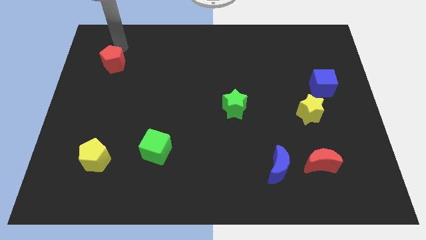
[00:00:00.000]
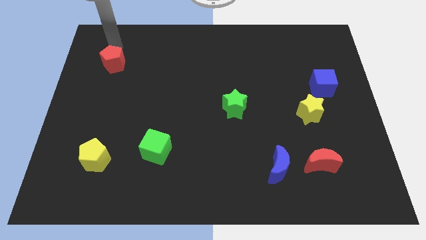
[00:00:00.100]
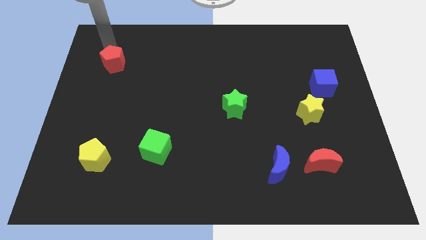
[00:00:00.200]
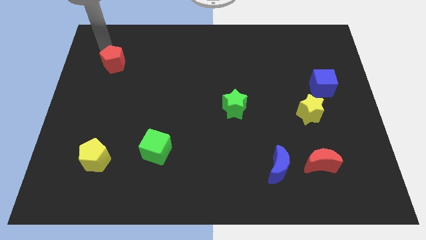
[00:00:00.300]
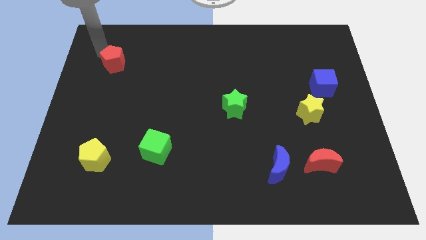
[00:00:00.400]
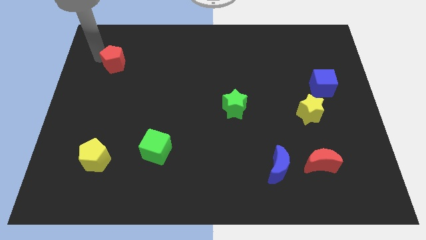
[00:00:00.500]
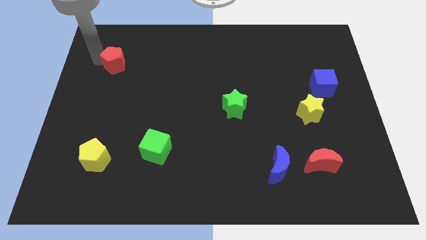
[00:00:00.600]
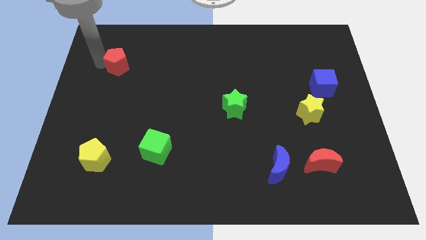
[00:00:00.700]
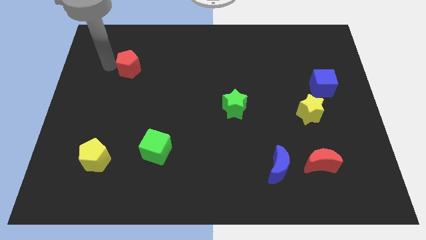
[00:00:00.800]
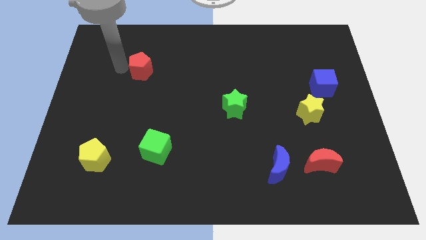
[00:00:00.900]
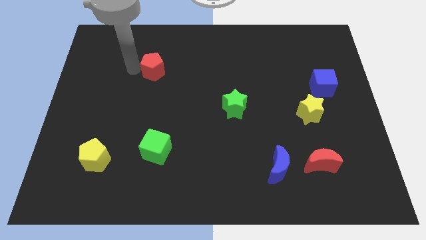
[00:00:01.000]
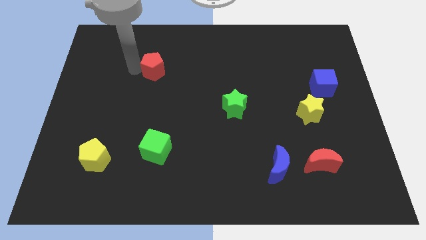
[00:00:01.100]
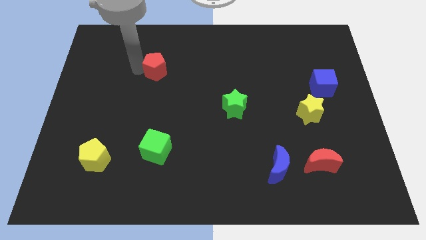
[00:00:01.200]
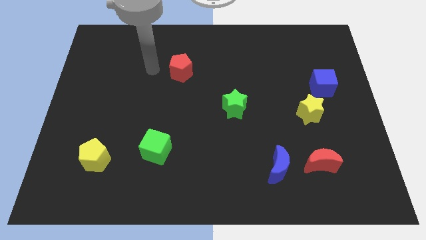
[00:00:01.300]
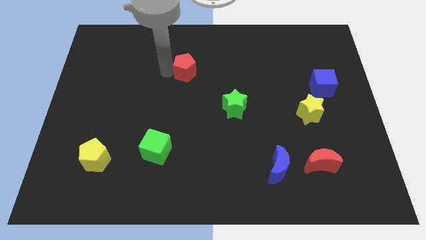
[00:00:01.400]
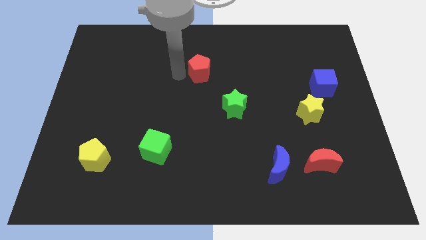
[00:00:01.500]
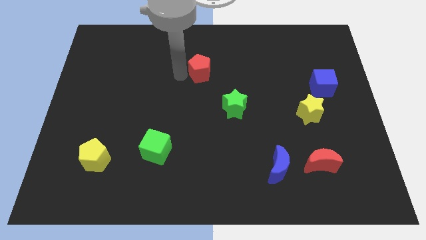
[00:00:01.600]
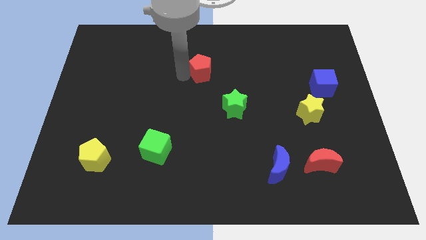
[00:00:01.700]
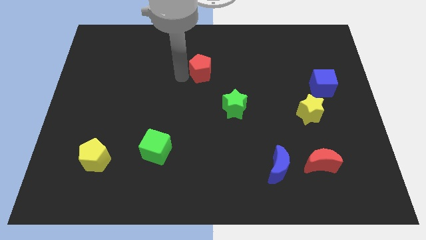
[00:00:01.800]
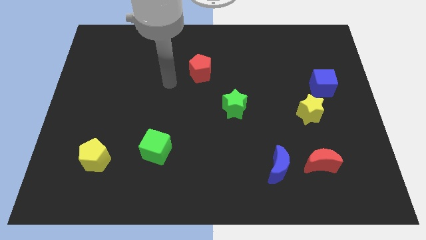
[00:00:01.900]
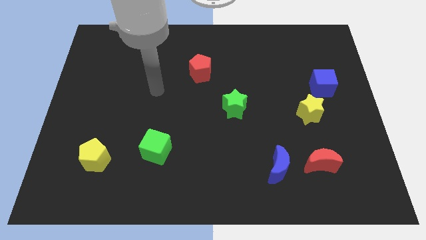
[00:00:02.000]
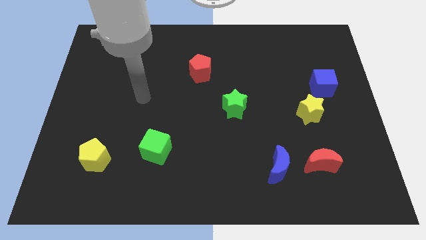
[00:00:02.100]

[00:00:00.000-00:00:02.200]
move the red pentagon diagonal to the green star

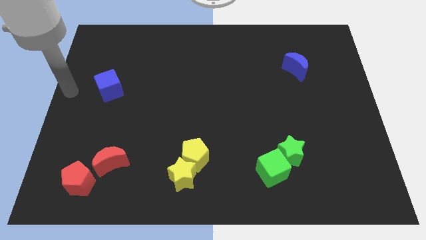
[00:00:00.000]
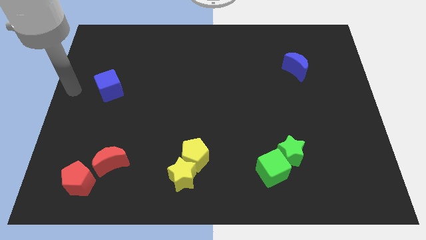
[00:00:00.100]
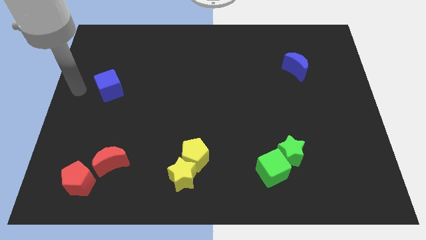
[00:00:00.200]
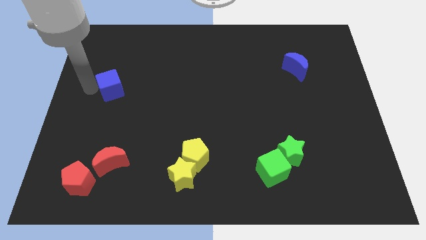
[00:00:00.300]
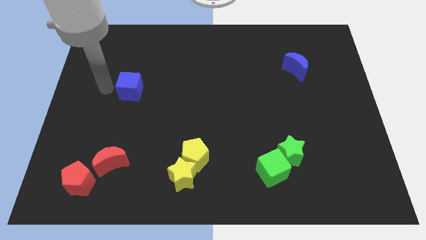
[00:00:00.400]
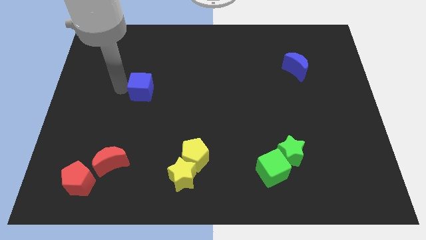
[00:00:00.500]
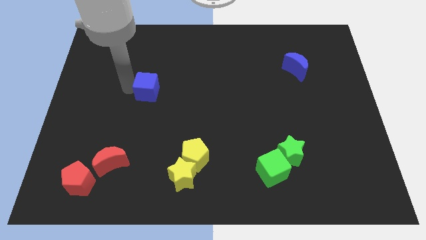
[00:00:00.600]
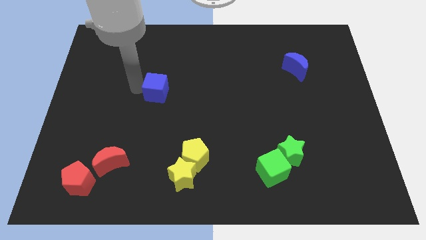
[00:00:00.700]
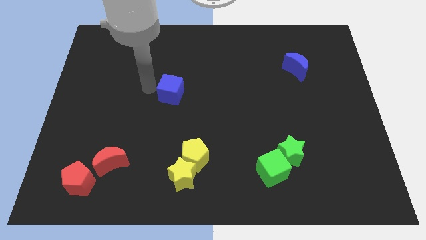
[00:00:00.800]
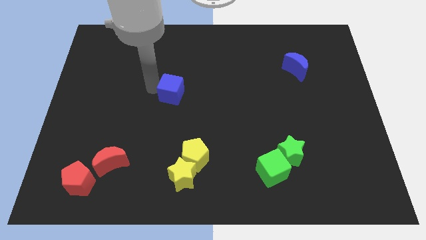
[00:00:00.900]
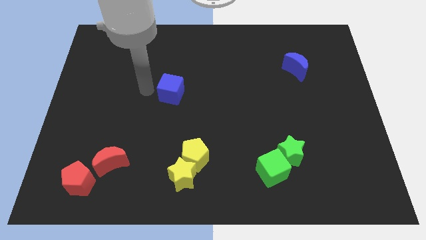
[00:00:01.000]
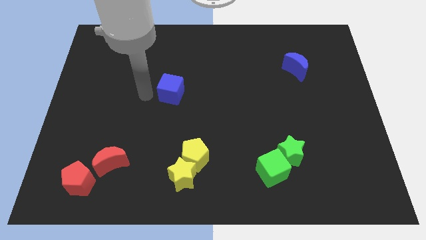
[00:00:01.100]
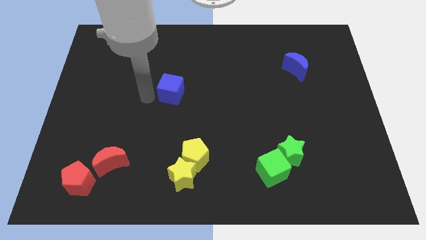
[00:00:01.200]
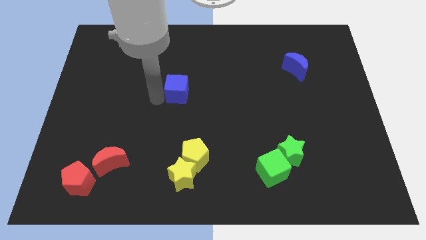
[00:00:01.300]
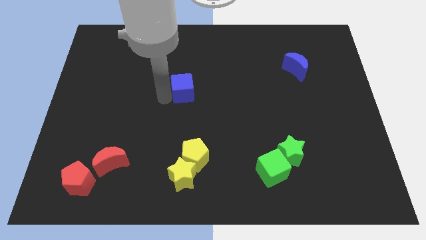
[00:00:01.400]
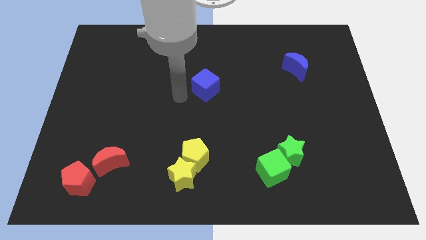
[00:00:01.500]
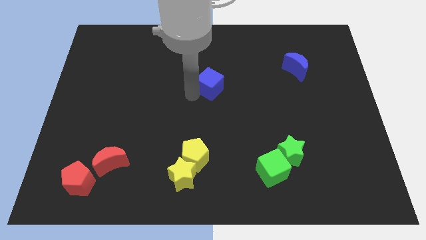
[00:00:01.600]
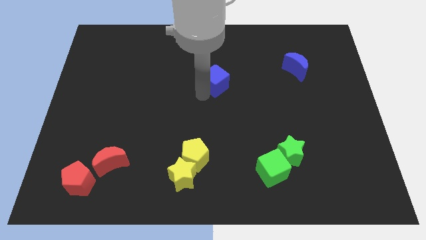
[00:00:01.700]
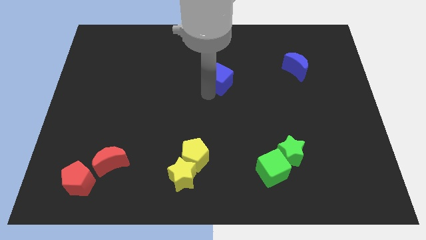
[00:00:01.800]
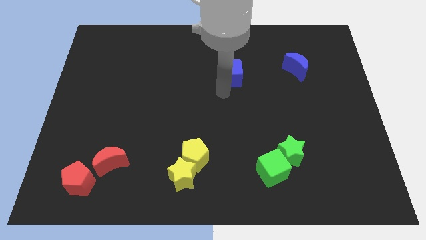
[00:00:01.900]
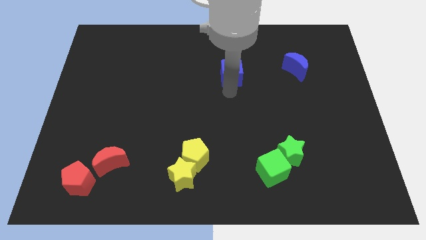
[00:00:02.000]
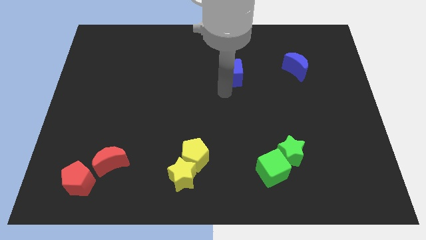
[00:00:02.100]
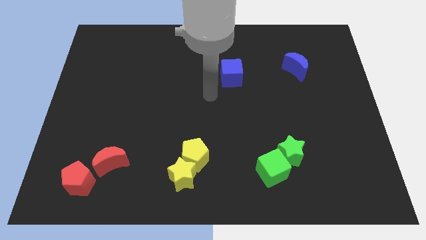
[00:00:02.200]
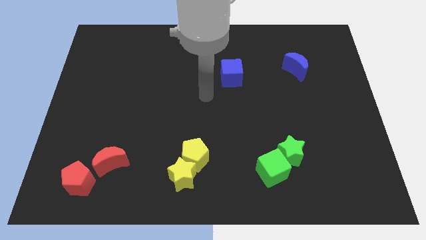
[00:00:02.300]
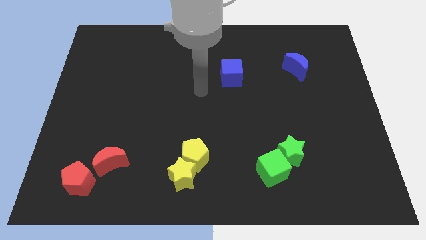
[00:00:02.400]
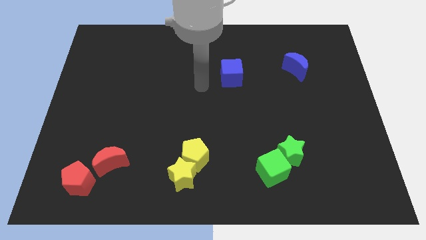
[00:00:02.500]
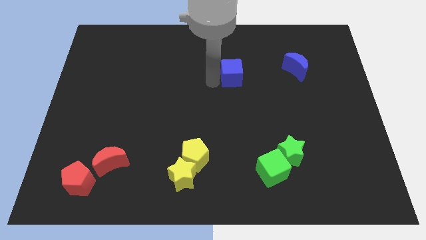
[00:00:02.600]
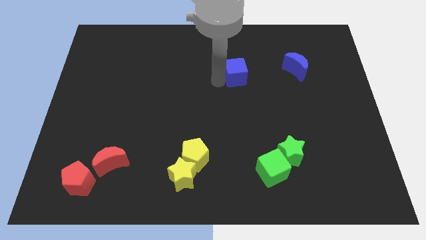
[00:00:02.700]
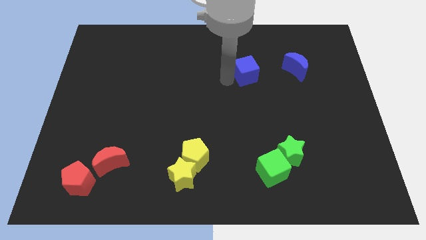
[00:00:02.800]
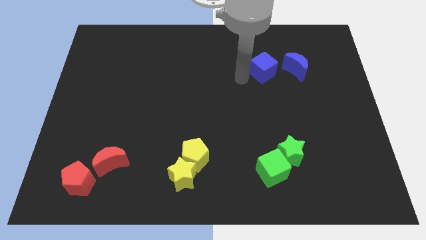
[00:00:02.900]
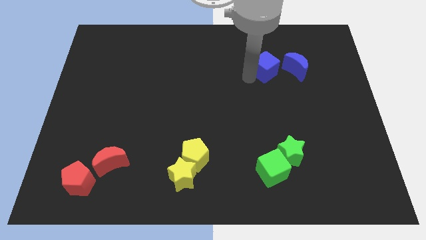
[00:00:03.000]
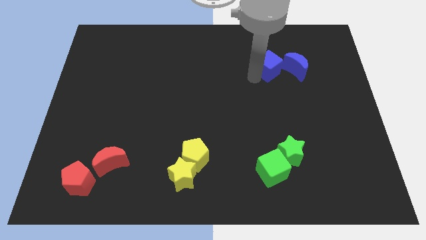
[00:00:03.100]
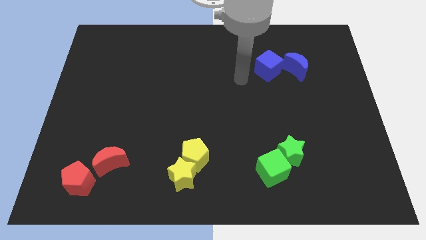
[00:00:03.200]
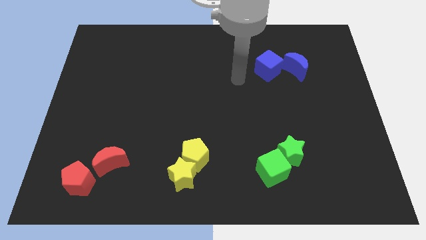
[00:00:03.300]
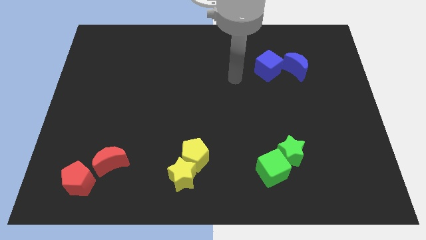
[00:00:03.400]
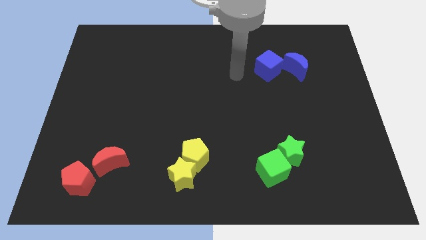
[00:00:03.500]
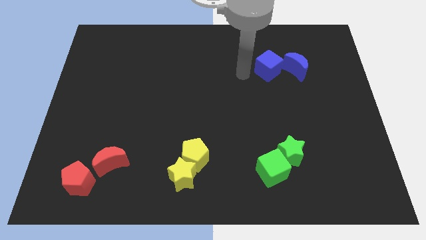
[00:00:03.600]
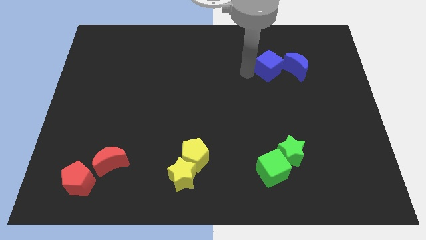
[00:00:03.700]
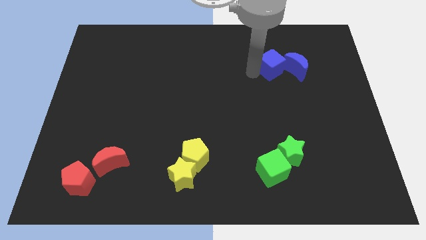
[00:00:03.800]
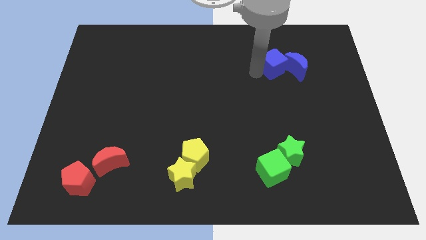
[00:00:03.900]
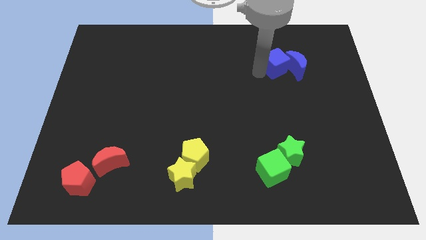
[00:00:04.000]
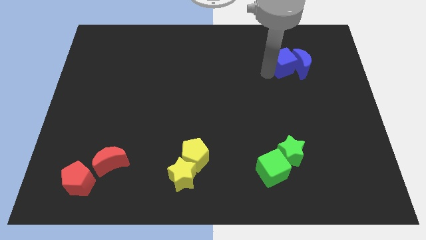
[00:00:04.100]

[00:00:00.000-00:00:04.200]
push the blue cube into the blue crescent

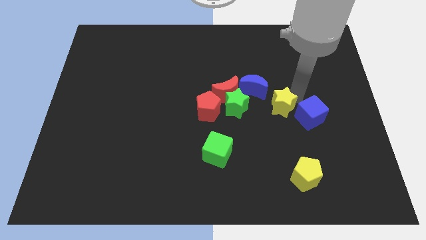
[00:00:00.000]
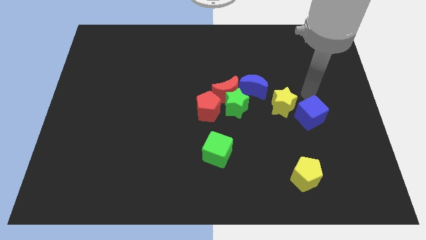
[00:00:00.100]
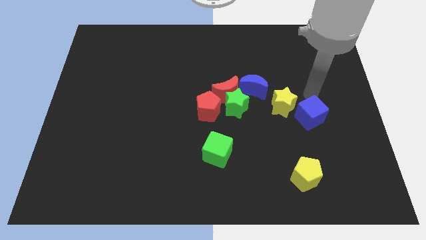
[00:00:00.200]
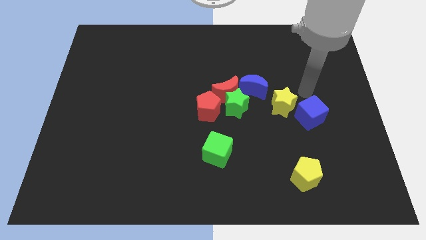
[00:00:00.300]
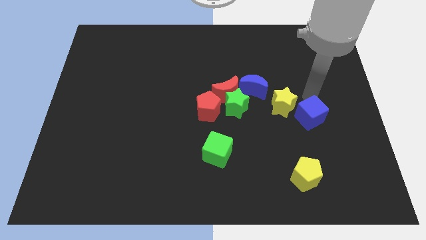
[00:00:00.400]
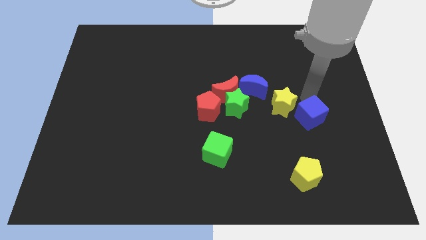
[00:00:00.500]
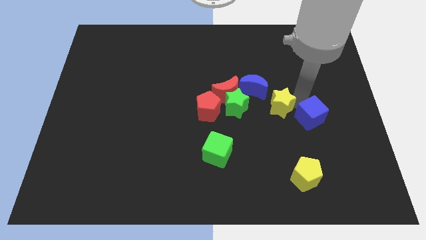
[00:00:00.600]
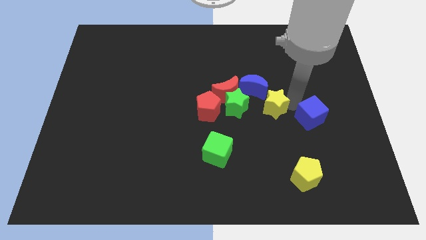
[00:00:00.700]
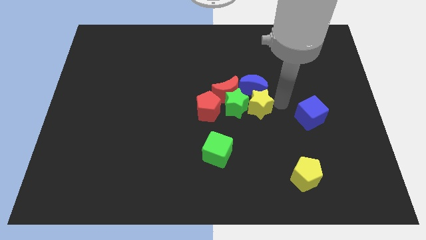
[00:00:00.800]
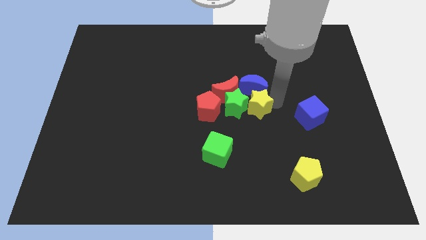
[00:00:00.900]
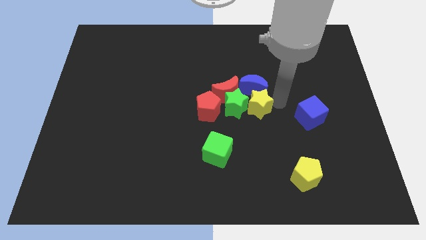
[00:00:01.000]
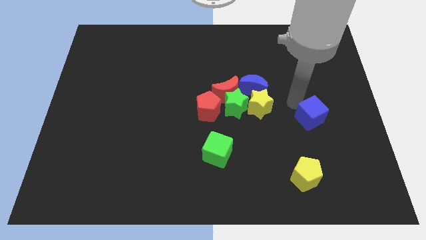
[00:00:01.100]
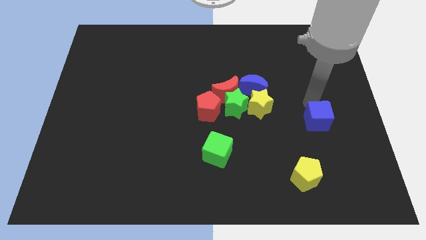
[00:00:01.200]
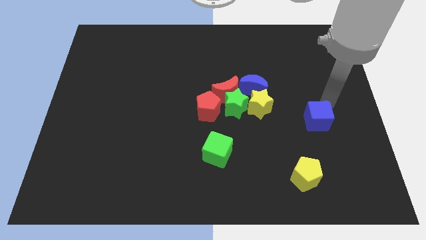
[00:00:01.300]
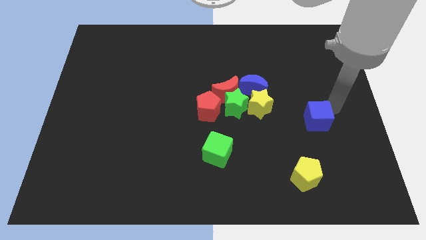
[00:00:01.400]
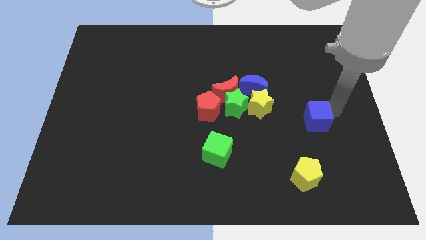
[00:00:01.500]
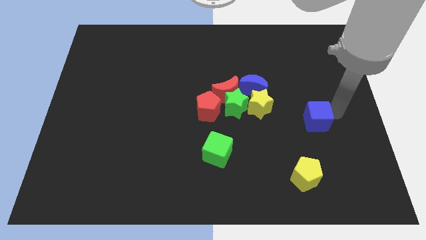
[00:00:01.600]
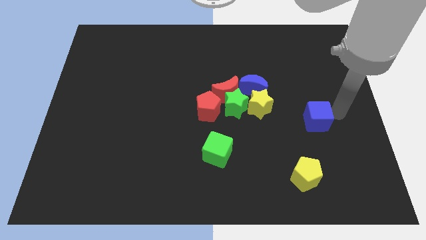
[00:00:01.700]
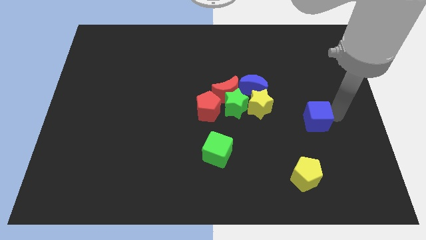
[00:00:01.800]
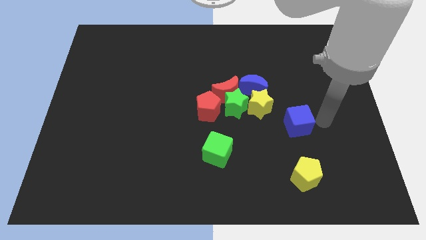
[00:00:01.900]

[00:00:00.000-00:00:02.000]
push yellow star into green star

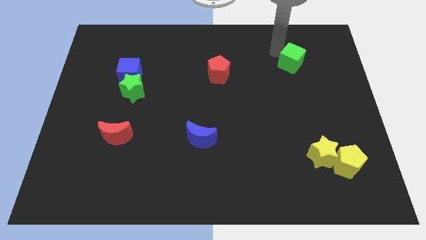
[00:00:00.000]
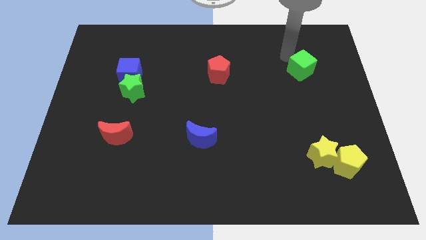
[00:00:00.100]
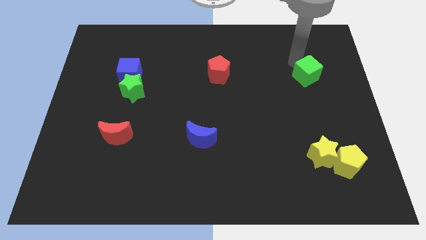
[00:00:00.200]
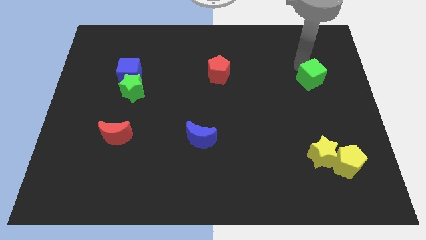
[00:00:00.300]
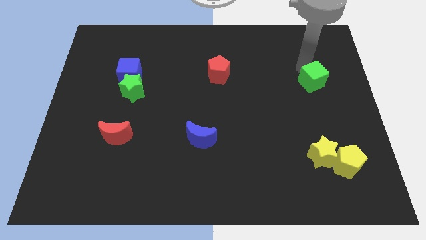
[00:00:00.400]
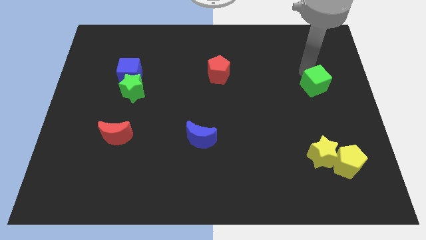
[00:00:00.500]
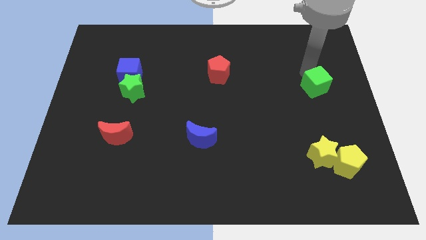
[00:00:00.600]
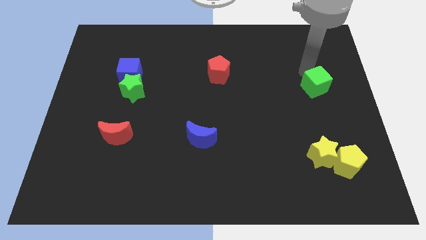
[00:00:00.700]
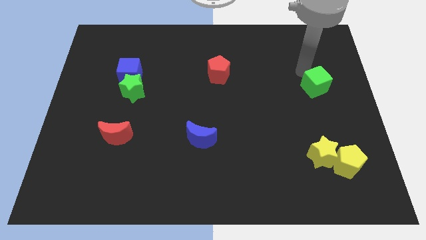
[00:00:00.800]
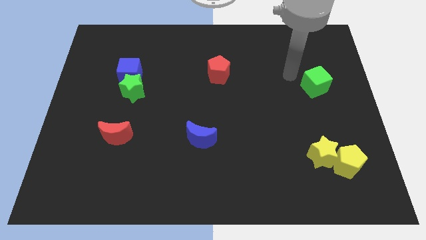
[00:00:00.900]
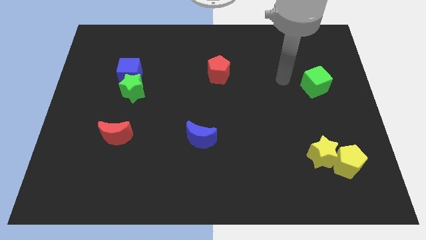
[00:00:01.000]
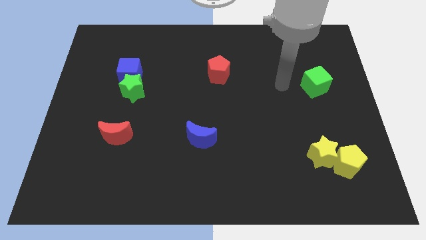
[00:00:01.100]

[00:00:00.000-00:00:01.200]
slide the green cube down slightly
